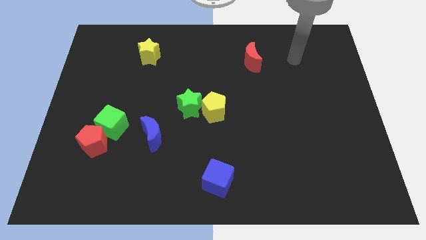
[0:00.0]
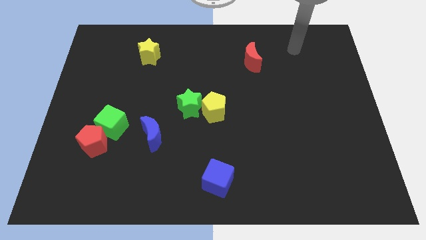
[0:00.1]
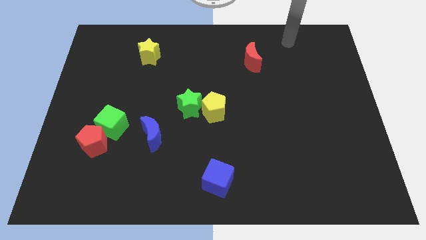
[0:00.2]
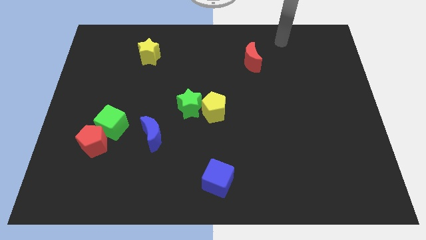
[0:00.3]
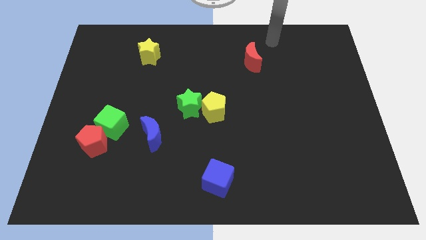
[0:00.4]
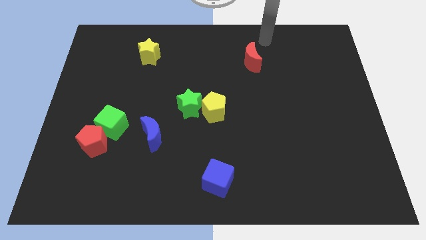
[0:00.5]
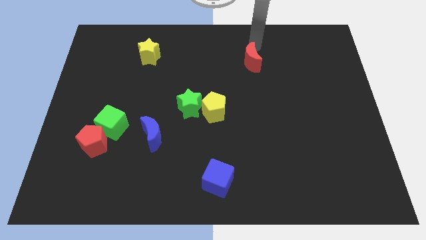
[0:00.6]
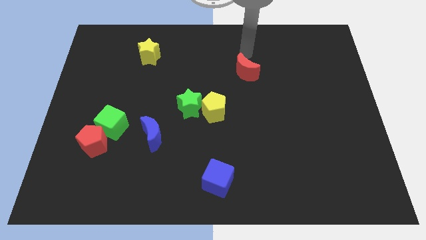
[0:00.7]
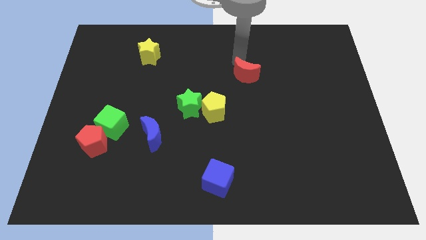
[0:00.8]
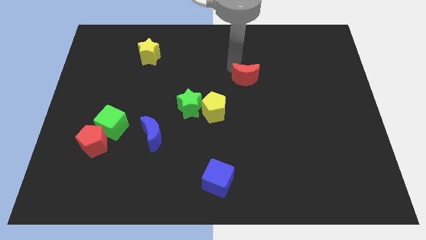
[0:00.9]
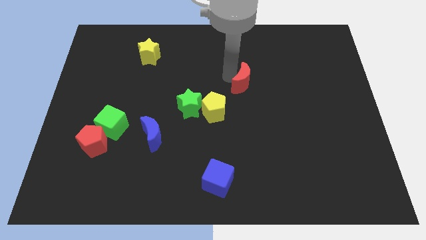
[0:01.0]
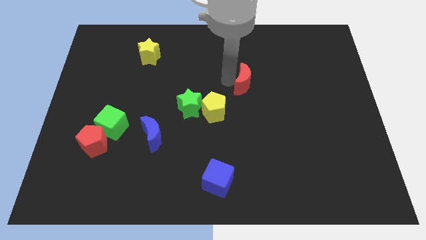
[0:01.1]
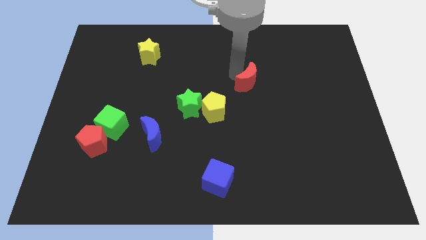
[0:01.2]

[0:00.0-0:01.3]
push the red crescent towards the bottom side of the board

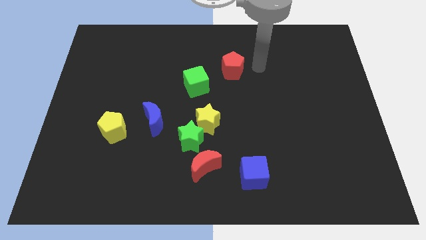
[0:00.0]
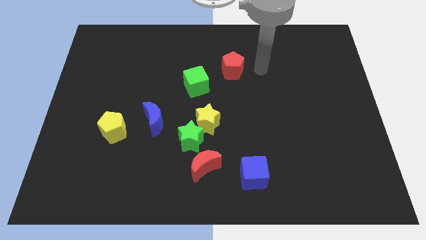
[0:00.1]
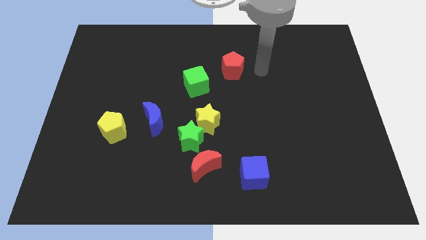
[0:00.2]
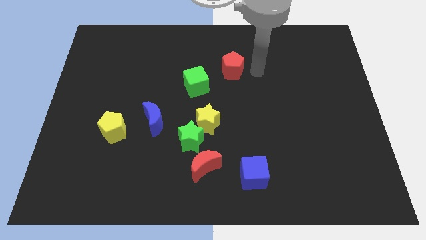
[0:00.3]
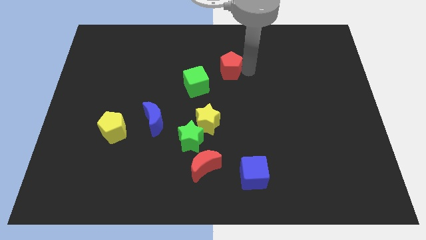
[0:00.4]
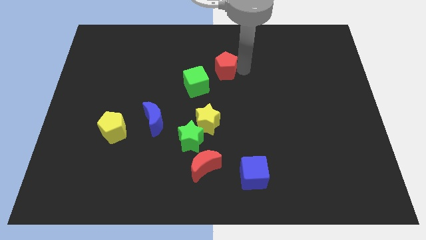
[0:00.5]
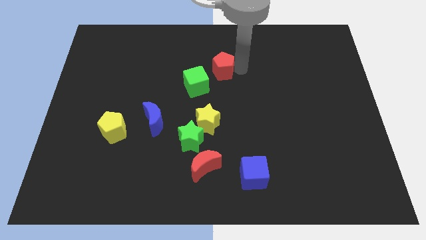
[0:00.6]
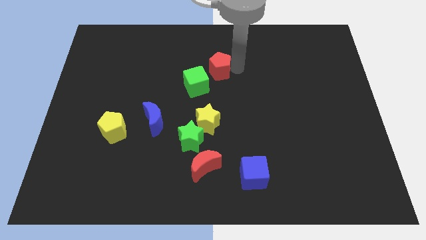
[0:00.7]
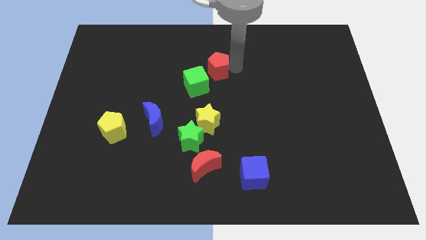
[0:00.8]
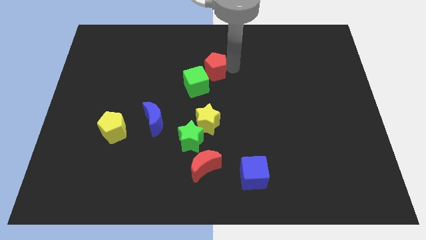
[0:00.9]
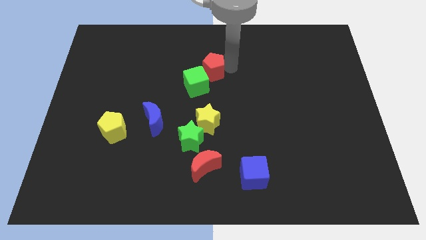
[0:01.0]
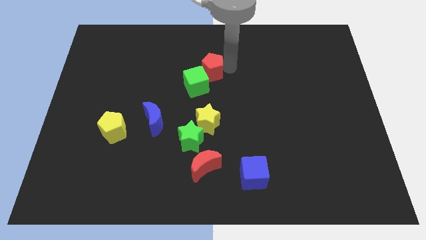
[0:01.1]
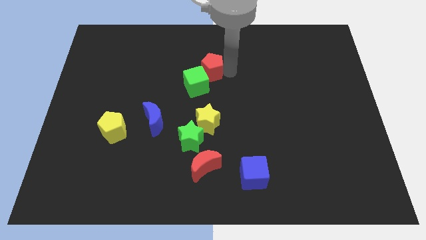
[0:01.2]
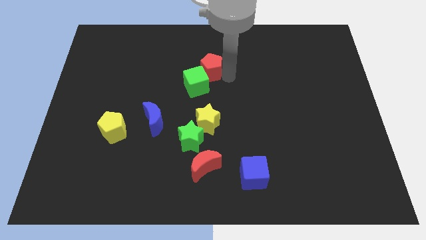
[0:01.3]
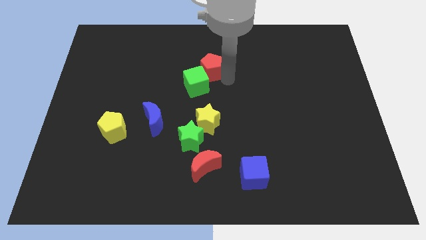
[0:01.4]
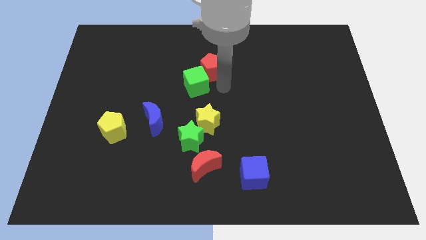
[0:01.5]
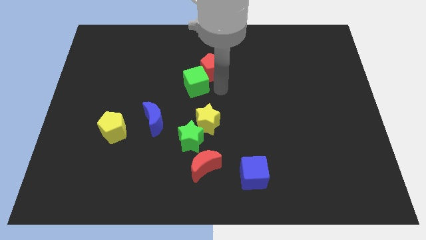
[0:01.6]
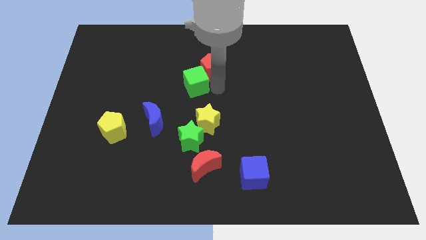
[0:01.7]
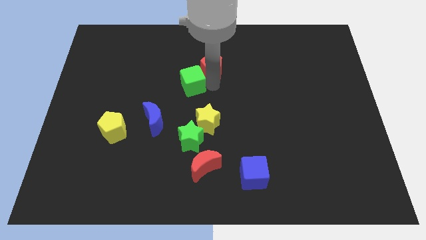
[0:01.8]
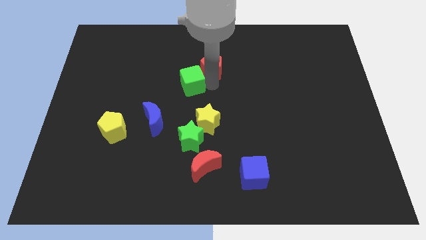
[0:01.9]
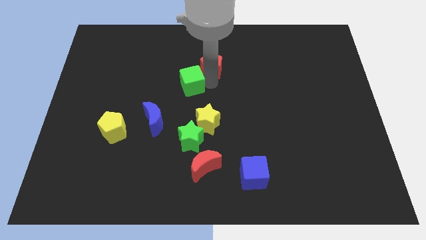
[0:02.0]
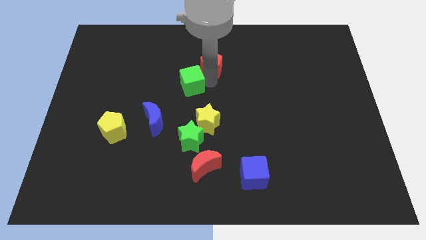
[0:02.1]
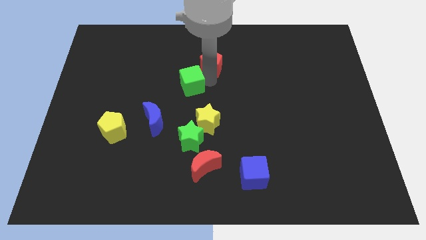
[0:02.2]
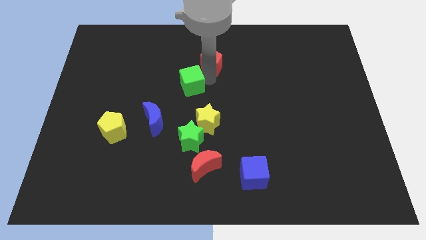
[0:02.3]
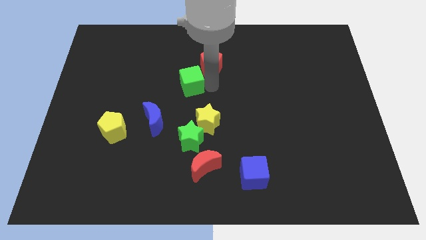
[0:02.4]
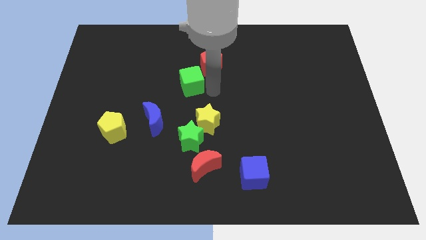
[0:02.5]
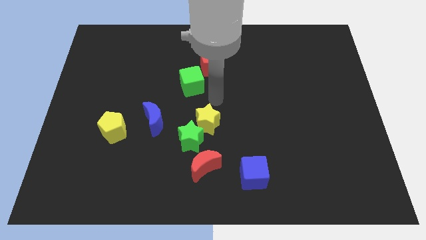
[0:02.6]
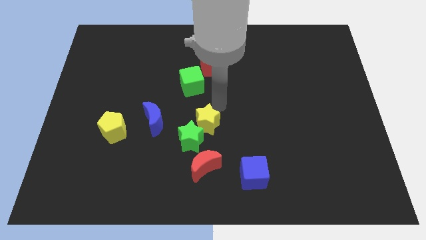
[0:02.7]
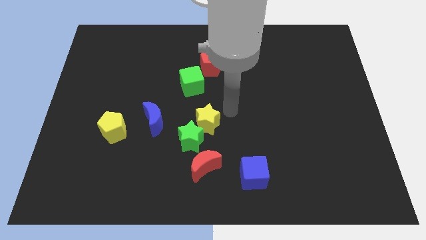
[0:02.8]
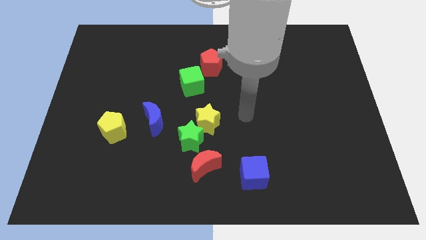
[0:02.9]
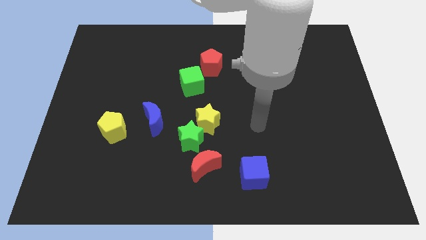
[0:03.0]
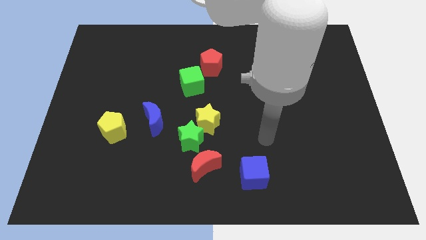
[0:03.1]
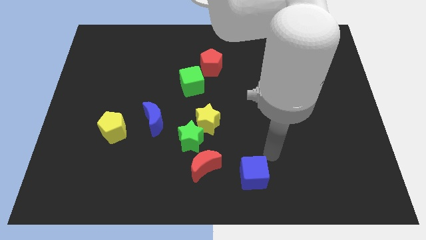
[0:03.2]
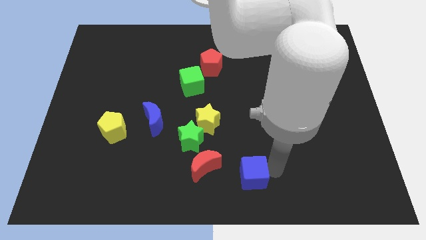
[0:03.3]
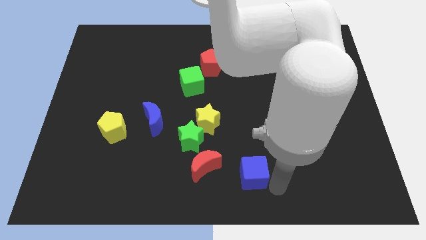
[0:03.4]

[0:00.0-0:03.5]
move your arm away from the red pentagon

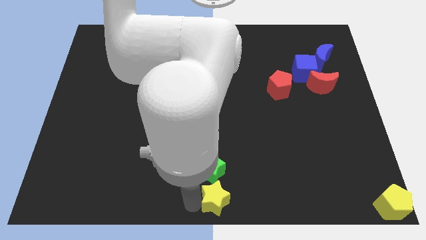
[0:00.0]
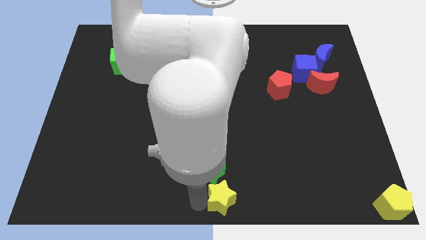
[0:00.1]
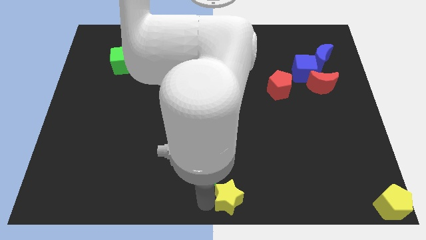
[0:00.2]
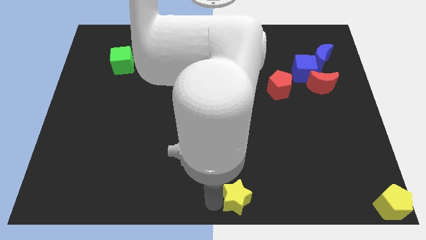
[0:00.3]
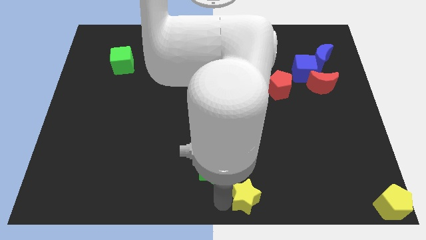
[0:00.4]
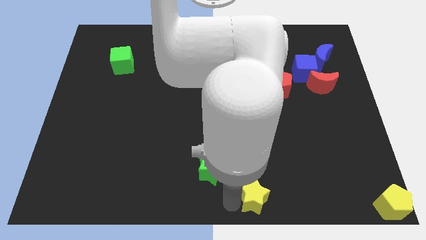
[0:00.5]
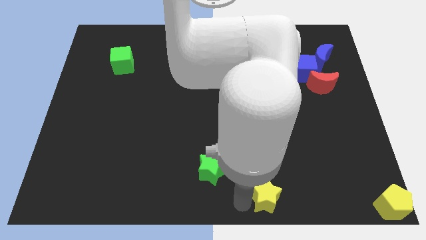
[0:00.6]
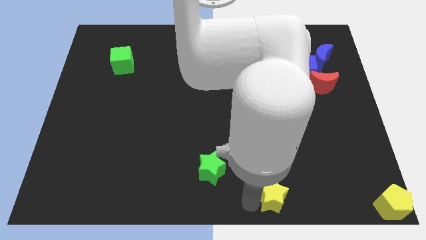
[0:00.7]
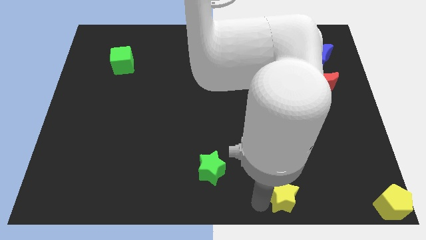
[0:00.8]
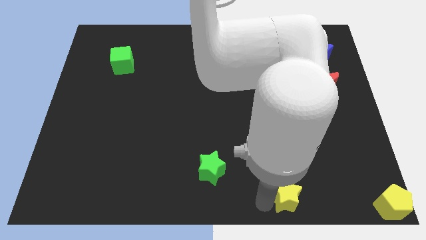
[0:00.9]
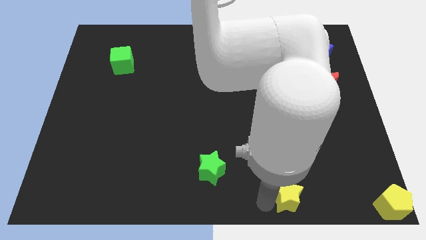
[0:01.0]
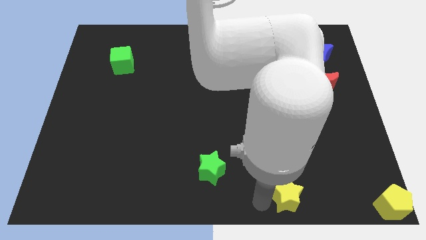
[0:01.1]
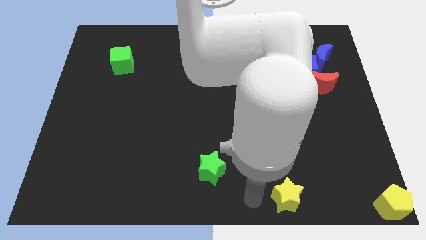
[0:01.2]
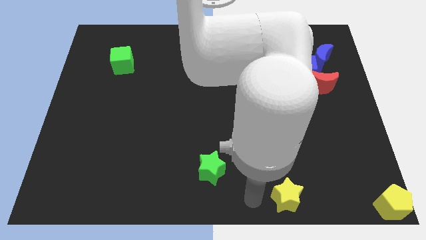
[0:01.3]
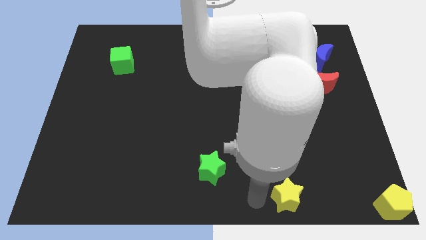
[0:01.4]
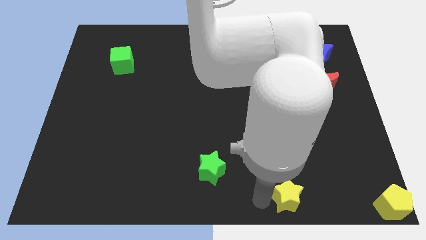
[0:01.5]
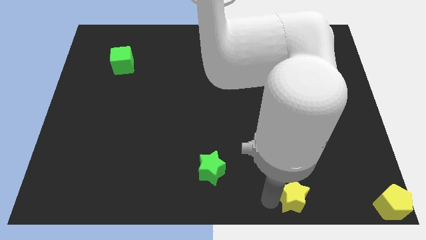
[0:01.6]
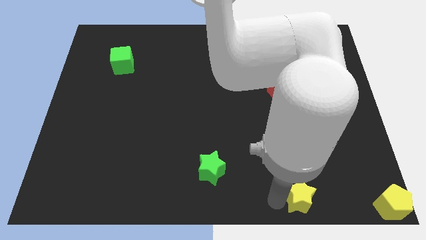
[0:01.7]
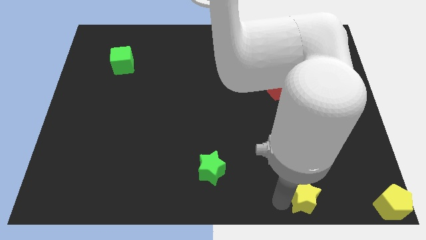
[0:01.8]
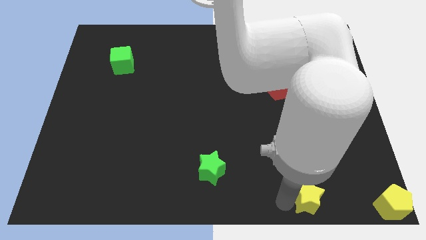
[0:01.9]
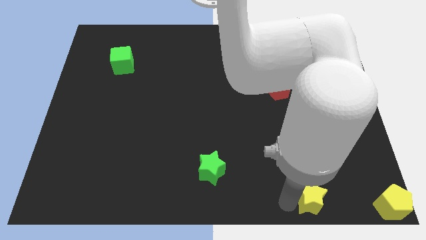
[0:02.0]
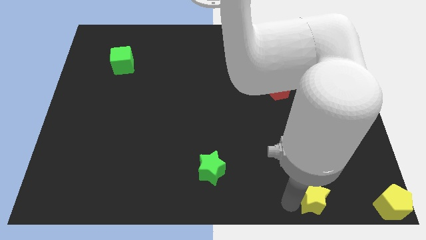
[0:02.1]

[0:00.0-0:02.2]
place the yellow star left to the yellow pentagon

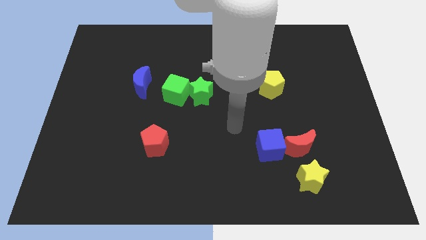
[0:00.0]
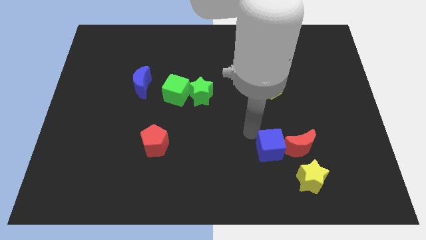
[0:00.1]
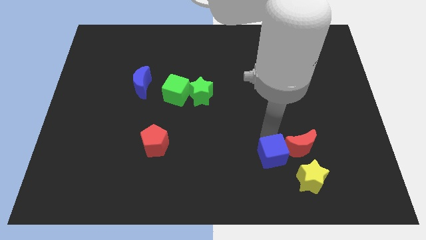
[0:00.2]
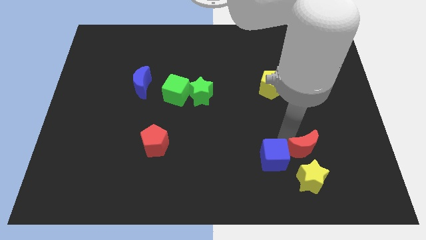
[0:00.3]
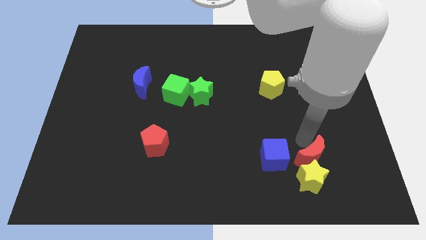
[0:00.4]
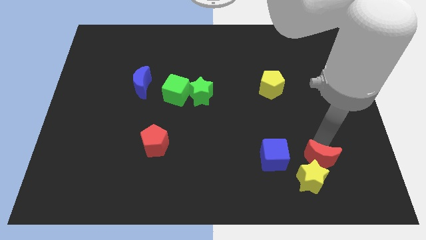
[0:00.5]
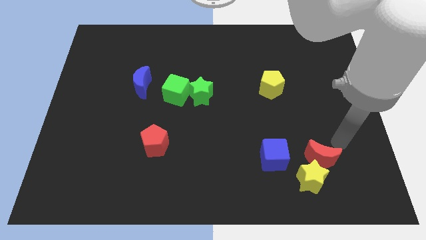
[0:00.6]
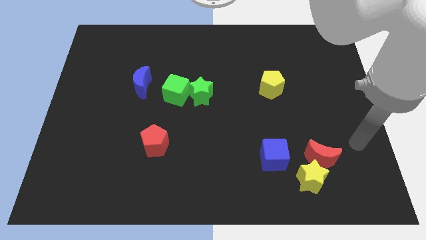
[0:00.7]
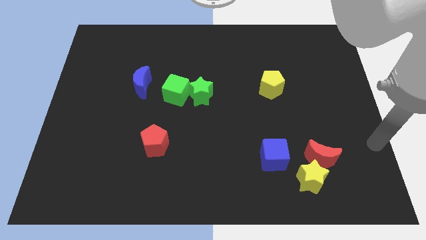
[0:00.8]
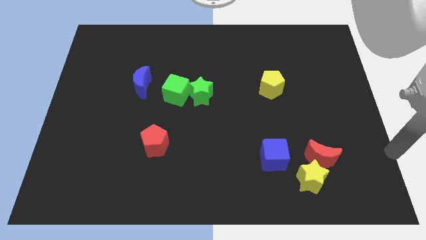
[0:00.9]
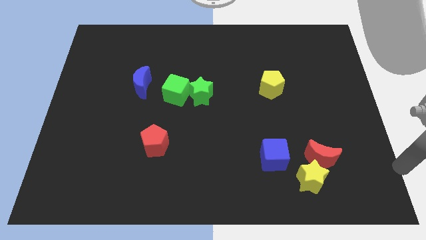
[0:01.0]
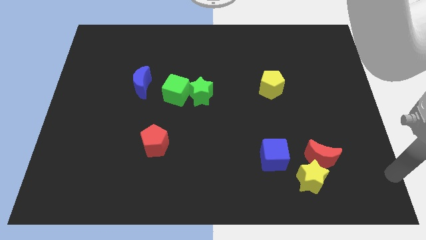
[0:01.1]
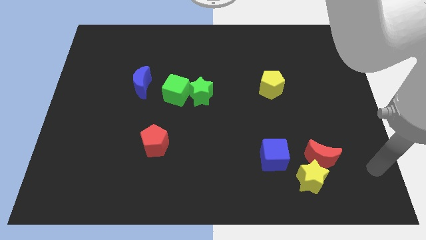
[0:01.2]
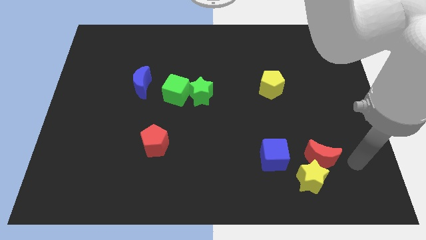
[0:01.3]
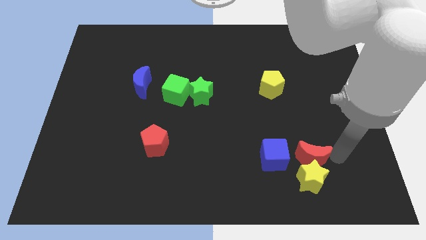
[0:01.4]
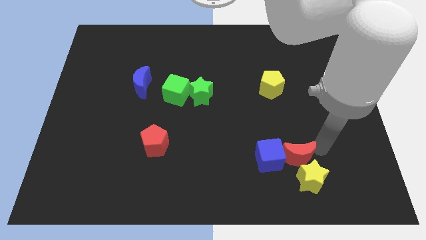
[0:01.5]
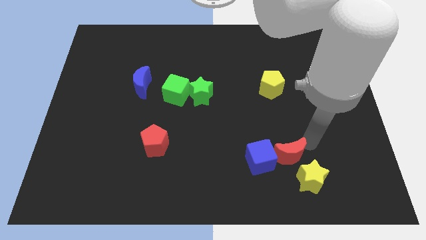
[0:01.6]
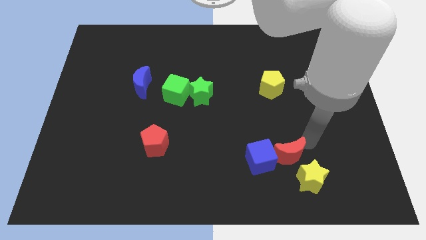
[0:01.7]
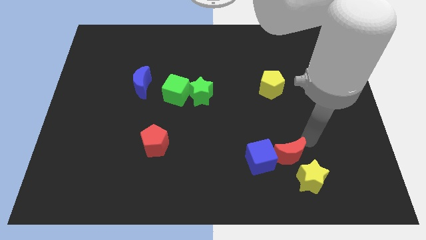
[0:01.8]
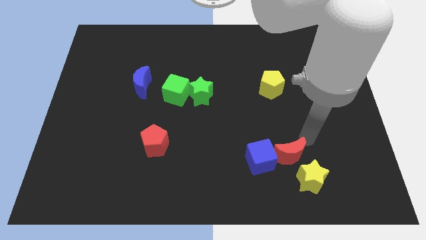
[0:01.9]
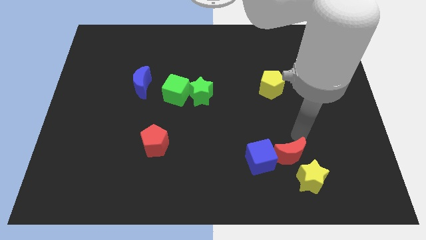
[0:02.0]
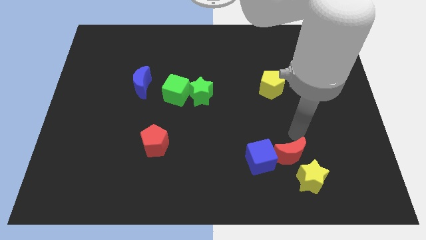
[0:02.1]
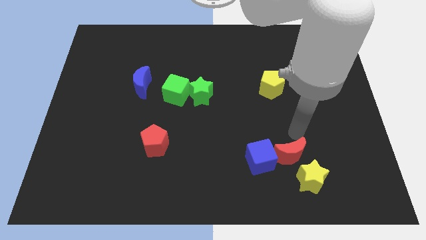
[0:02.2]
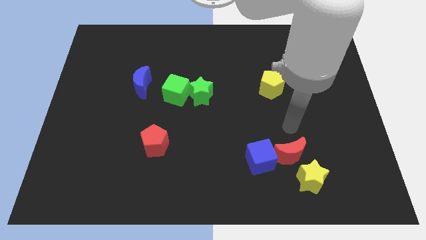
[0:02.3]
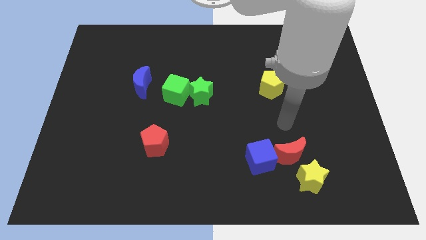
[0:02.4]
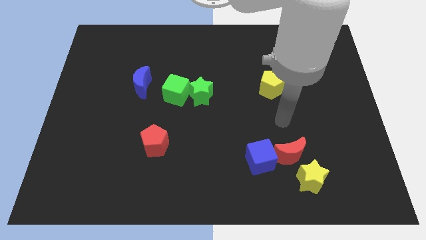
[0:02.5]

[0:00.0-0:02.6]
push the red moon into blue cube
